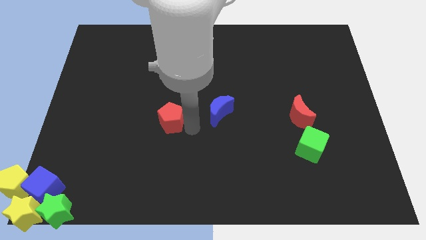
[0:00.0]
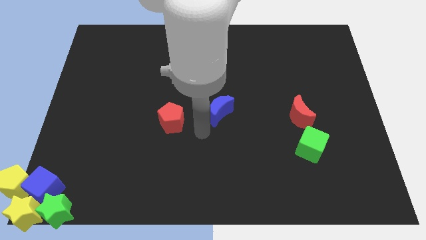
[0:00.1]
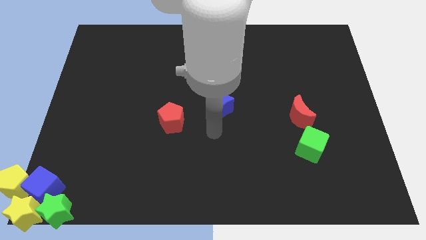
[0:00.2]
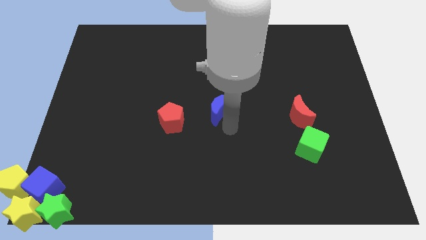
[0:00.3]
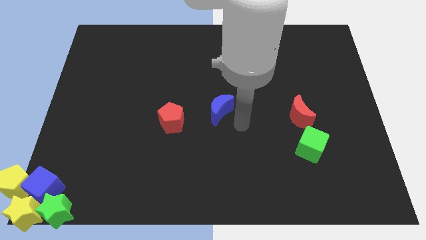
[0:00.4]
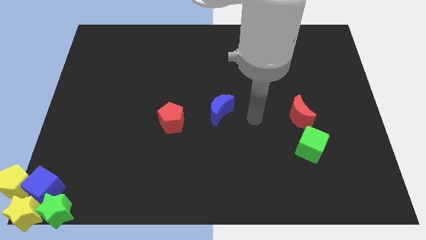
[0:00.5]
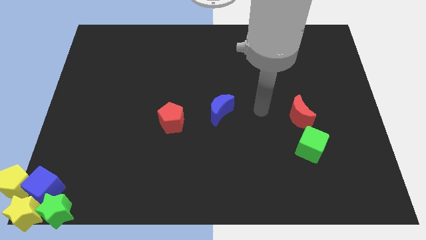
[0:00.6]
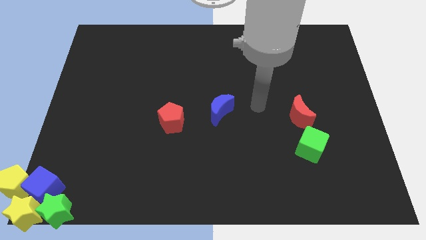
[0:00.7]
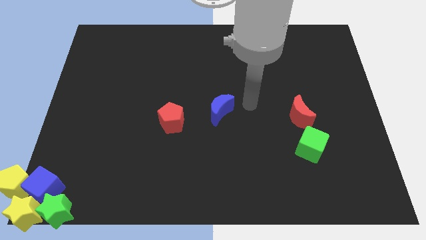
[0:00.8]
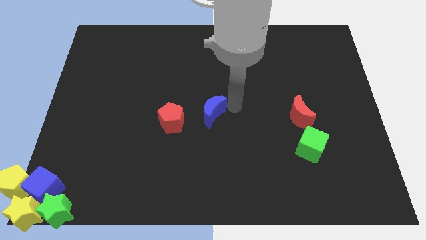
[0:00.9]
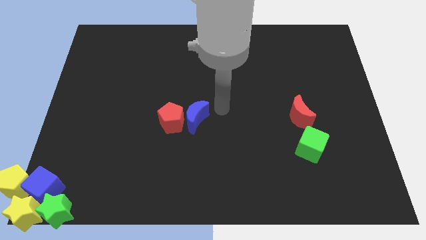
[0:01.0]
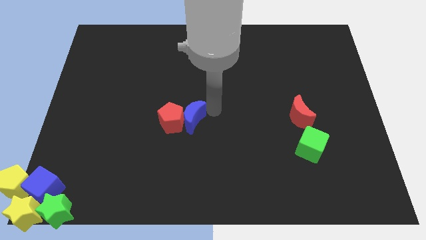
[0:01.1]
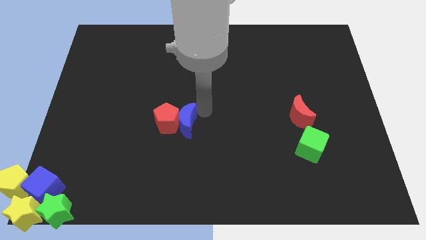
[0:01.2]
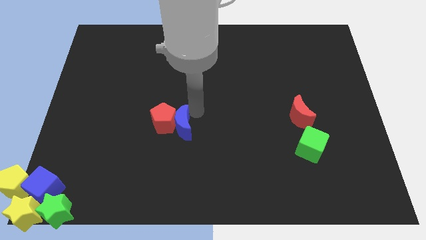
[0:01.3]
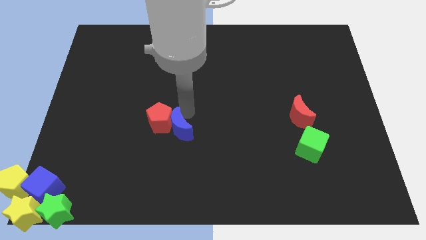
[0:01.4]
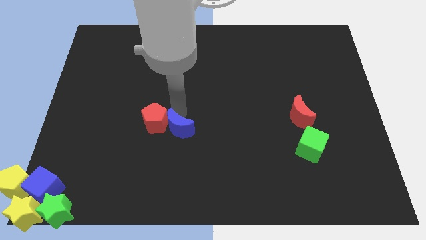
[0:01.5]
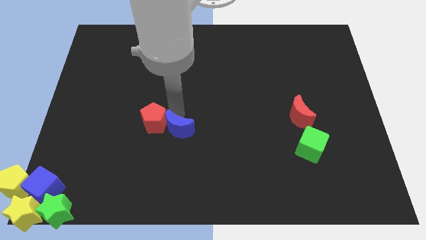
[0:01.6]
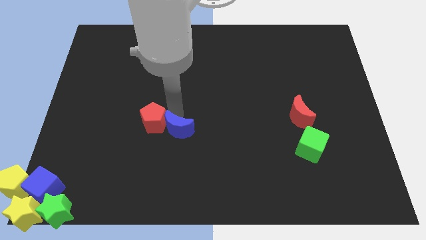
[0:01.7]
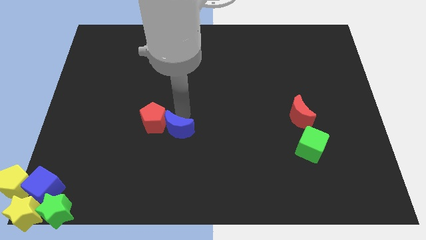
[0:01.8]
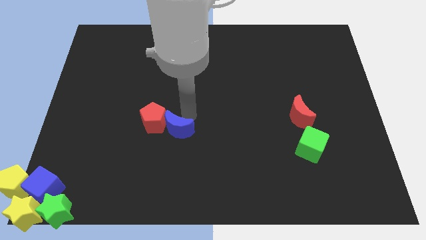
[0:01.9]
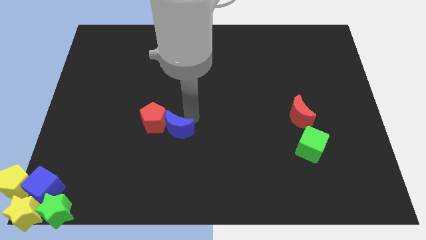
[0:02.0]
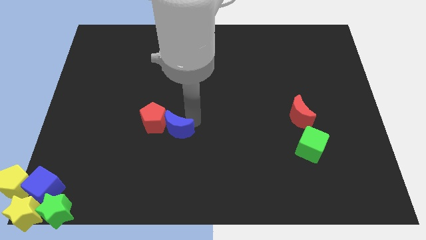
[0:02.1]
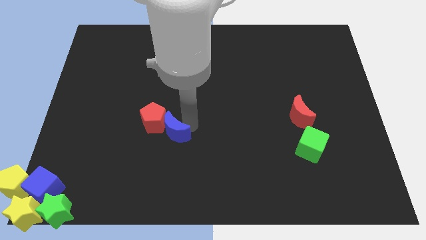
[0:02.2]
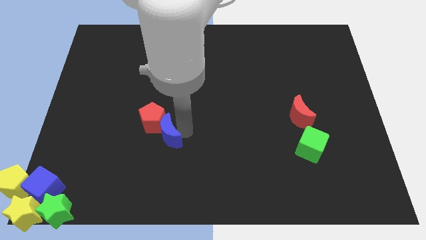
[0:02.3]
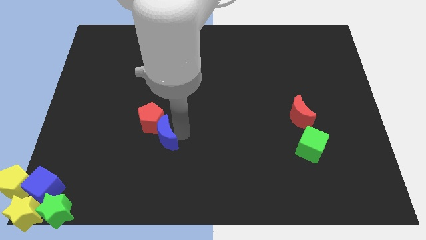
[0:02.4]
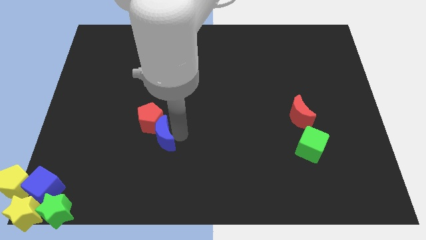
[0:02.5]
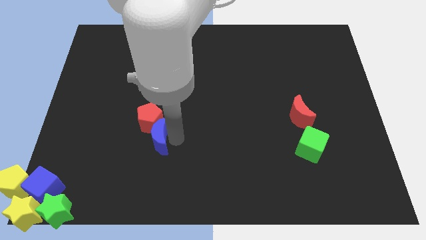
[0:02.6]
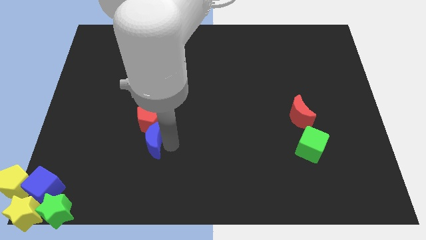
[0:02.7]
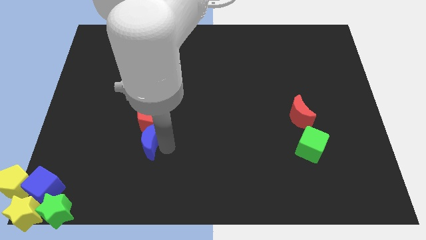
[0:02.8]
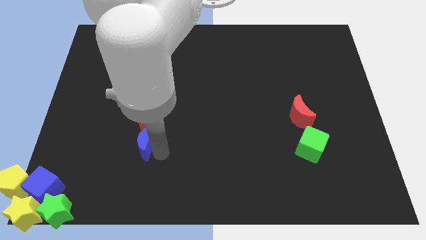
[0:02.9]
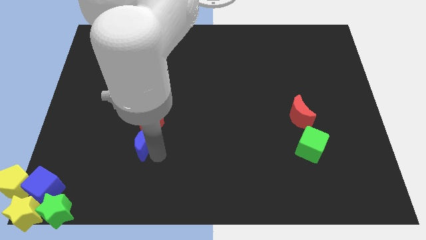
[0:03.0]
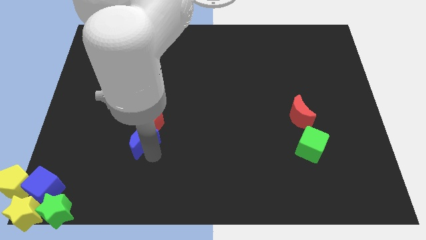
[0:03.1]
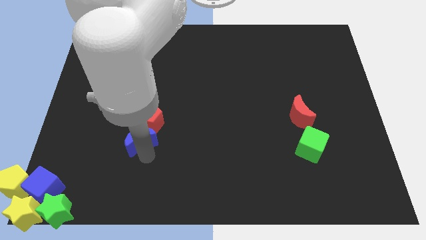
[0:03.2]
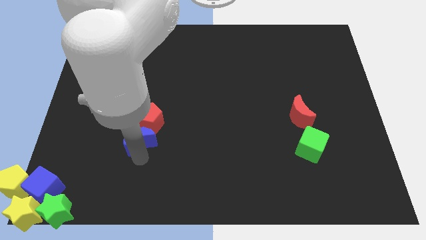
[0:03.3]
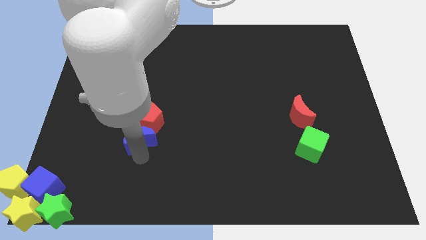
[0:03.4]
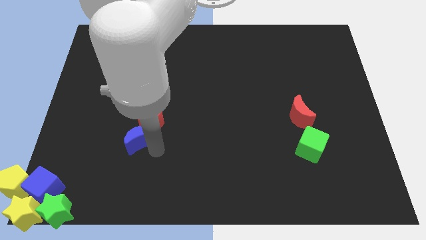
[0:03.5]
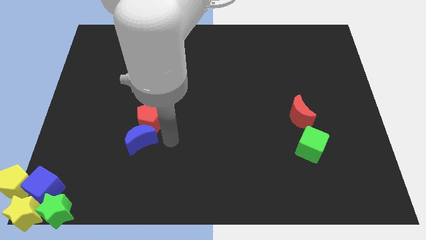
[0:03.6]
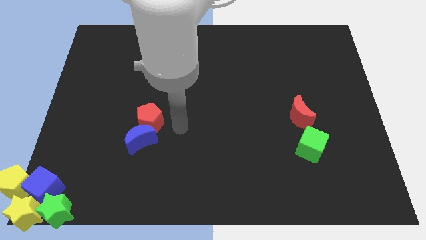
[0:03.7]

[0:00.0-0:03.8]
place blue moon at the bottom of the red pentagon

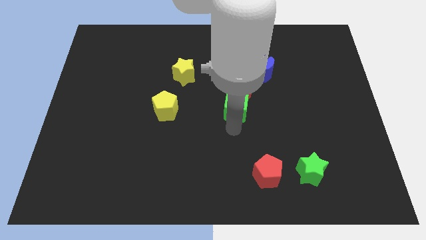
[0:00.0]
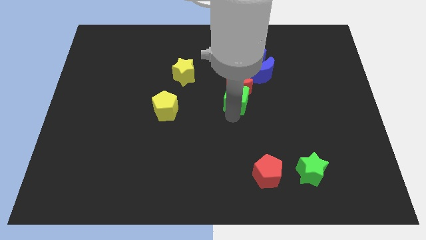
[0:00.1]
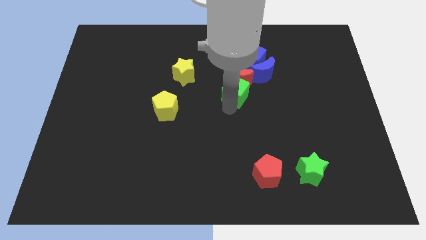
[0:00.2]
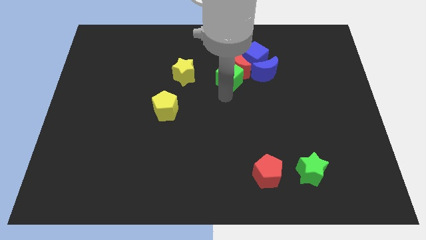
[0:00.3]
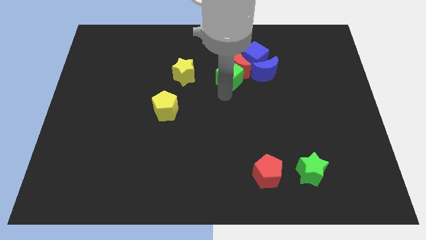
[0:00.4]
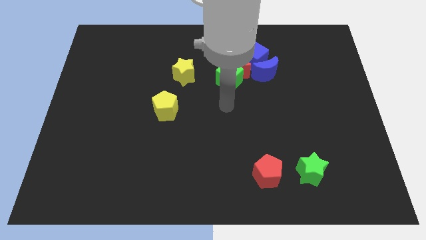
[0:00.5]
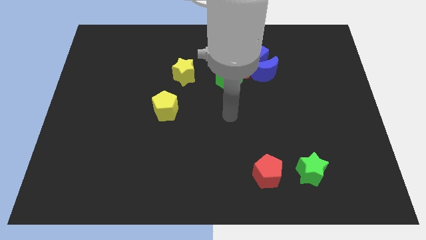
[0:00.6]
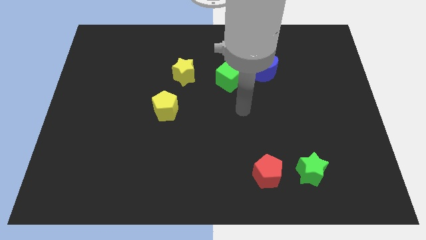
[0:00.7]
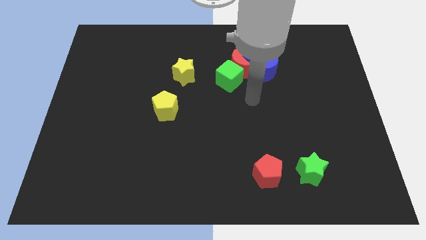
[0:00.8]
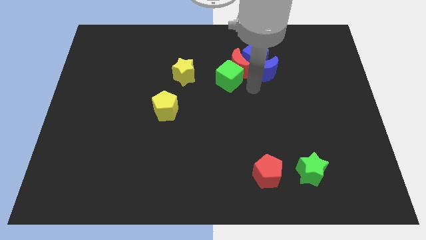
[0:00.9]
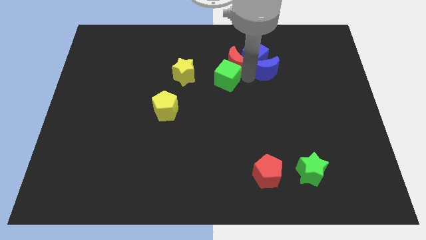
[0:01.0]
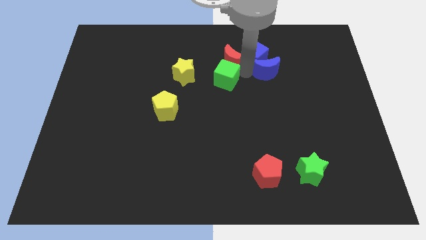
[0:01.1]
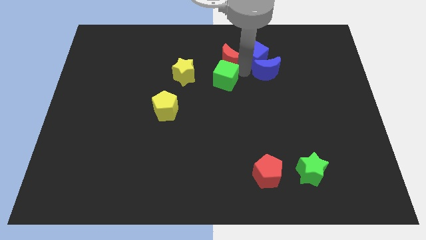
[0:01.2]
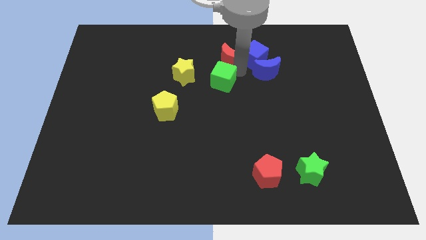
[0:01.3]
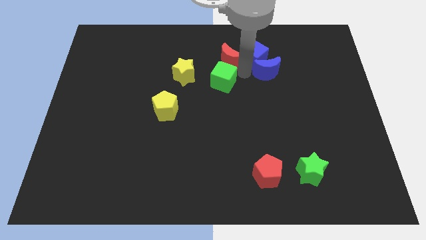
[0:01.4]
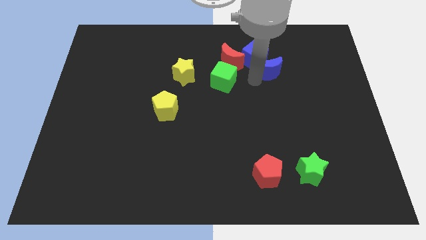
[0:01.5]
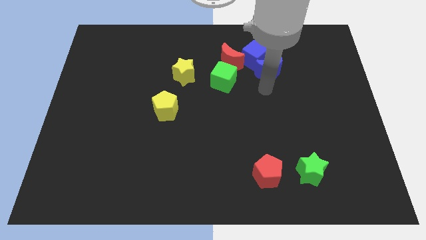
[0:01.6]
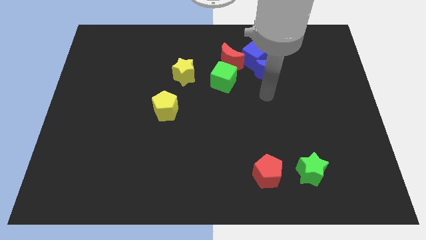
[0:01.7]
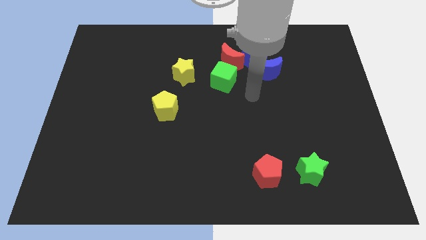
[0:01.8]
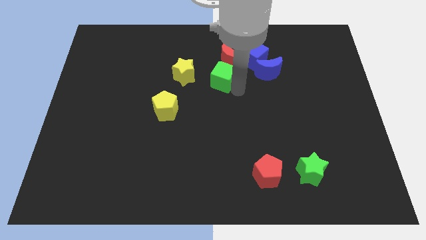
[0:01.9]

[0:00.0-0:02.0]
slide the green cube and red moon towards top side

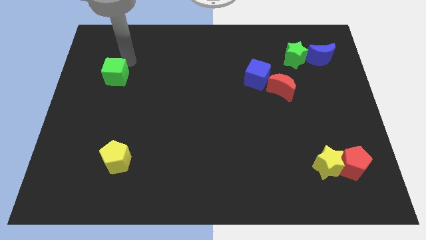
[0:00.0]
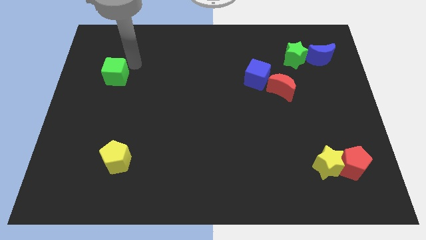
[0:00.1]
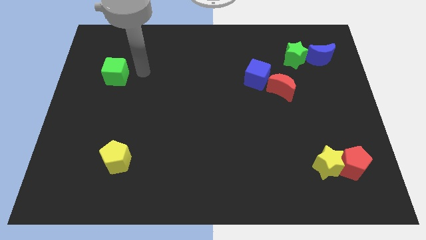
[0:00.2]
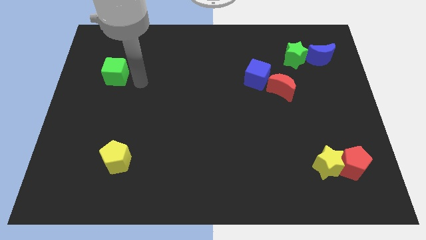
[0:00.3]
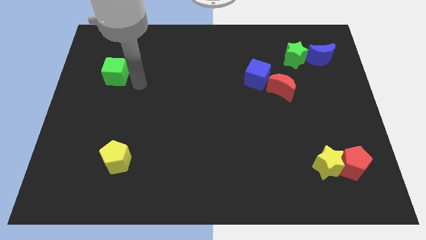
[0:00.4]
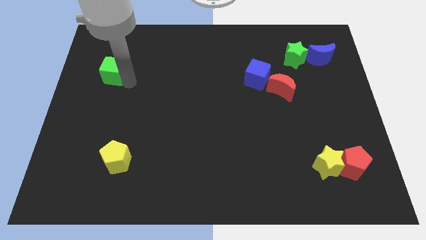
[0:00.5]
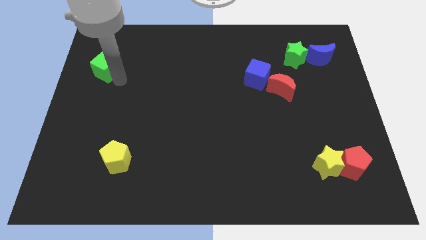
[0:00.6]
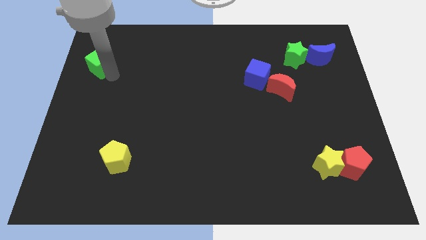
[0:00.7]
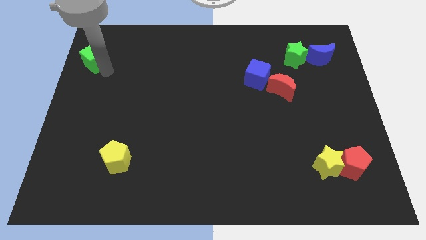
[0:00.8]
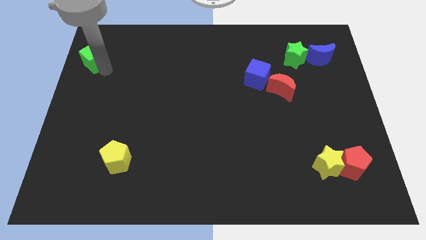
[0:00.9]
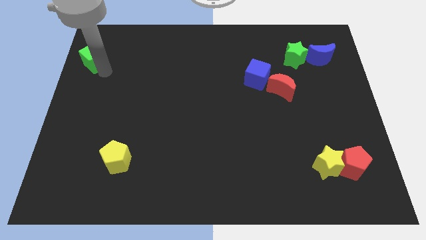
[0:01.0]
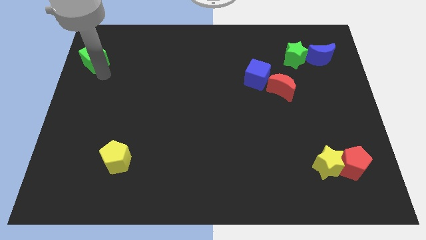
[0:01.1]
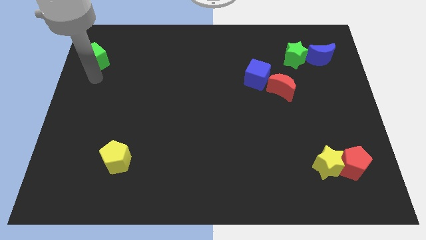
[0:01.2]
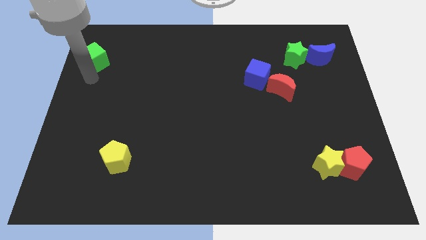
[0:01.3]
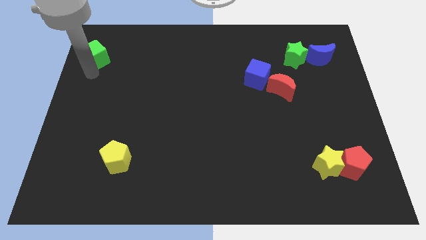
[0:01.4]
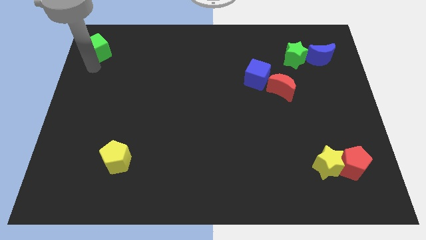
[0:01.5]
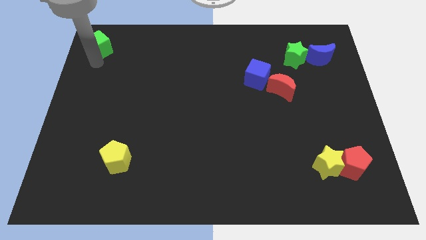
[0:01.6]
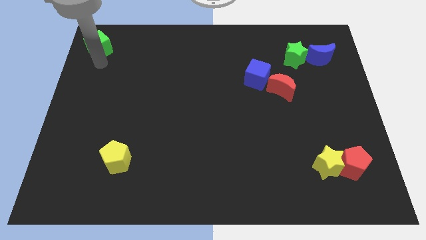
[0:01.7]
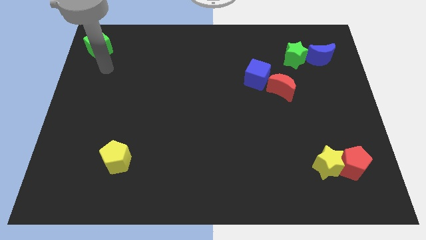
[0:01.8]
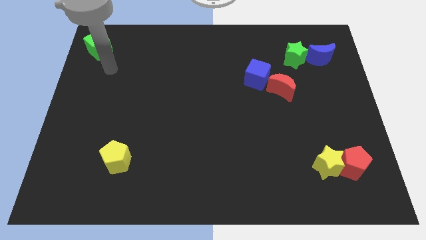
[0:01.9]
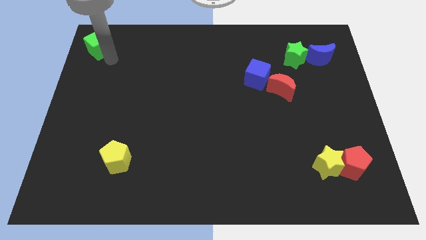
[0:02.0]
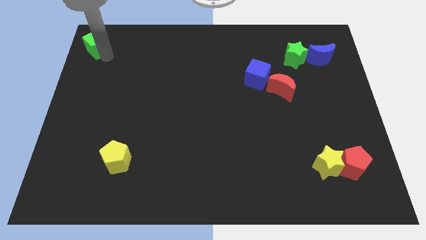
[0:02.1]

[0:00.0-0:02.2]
slide the green cube diagonal to the yellow pentagon

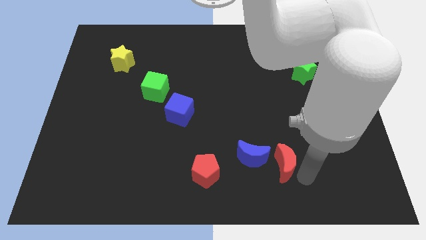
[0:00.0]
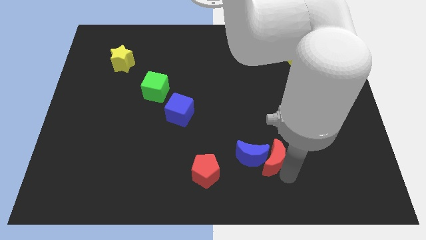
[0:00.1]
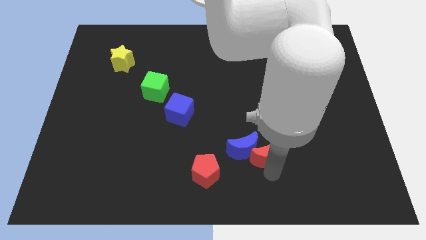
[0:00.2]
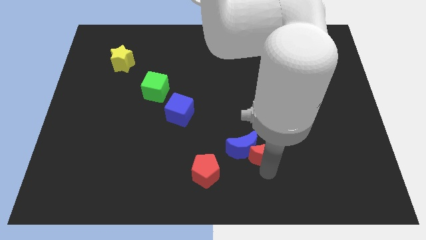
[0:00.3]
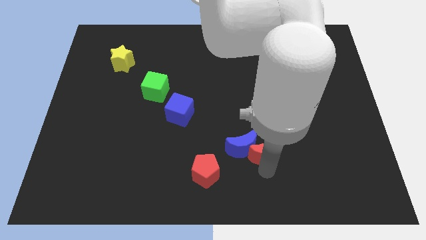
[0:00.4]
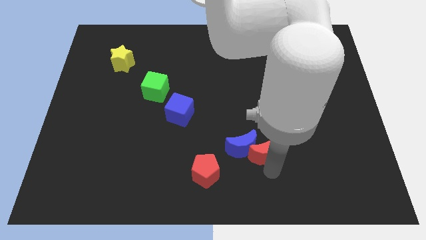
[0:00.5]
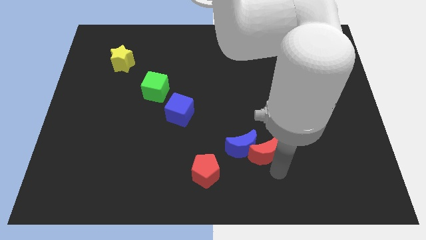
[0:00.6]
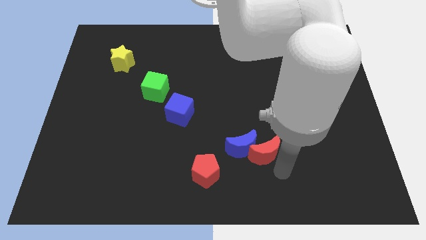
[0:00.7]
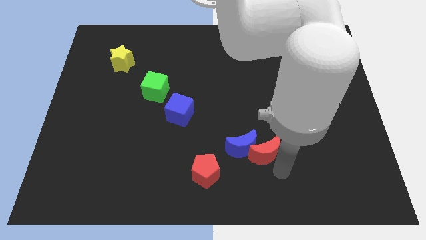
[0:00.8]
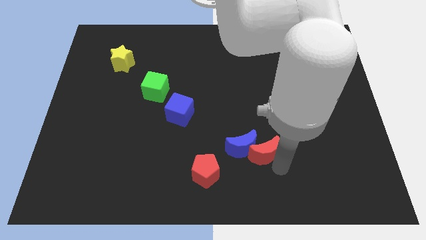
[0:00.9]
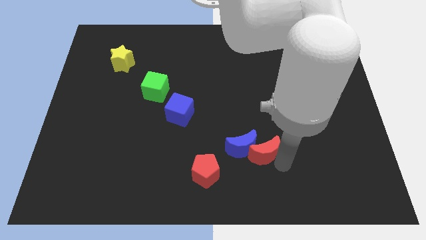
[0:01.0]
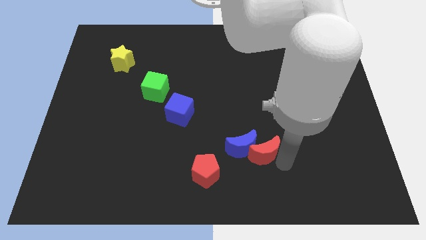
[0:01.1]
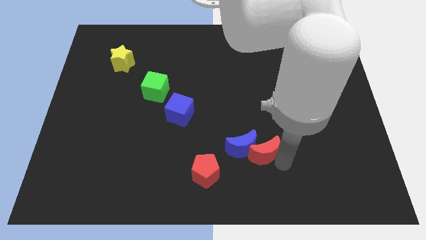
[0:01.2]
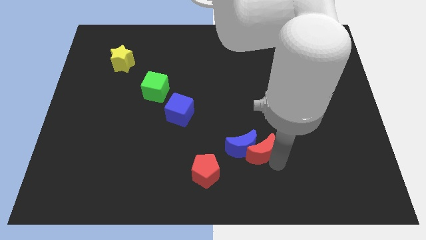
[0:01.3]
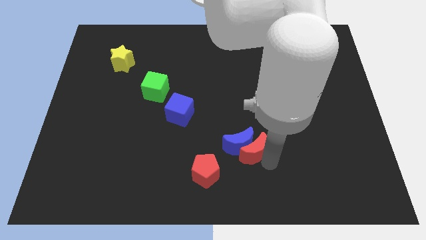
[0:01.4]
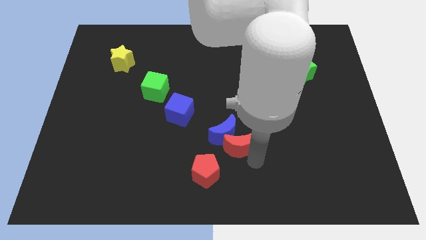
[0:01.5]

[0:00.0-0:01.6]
push the red crescent into the blue crescent
